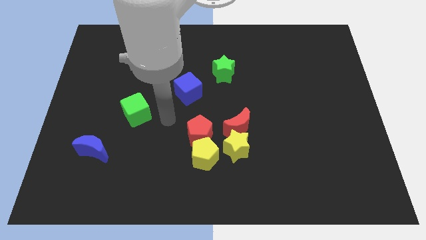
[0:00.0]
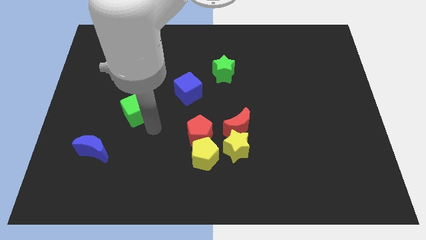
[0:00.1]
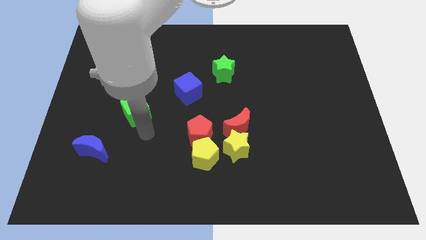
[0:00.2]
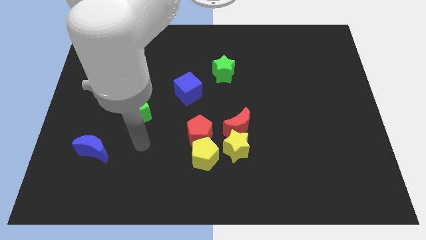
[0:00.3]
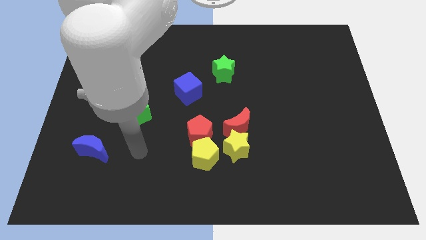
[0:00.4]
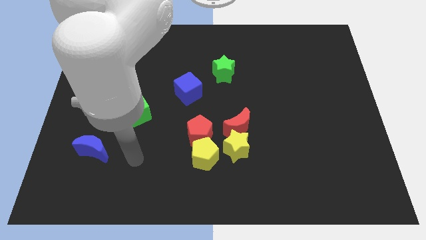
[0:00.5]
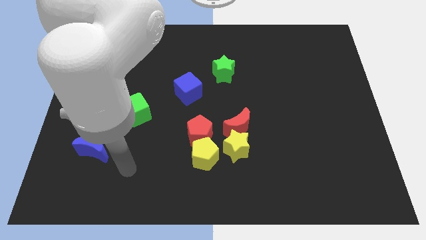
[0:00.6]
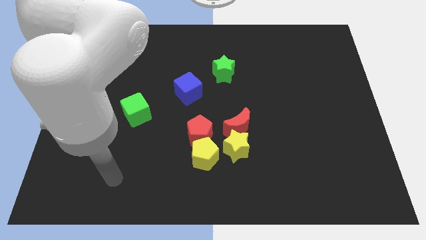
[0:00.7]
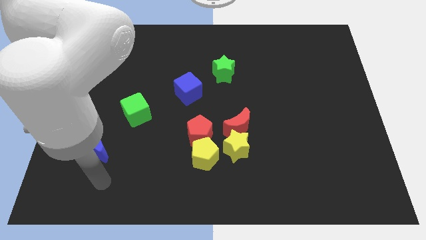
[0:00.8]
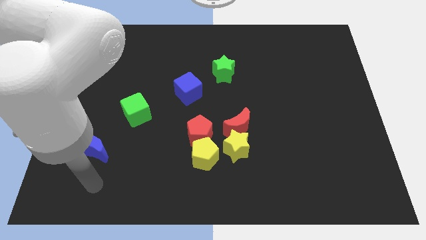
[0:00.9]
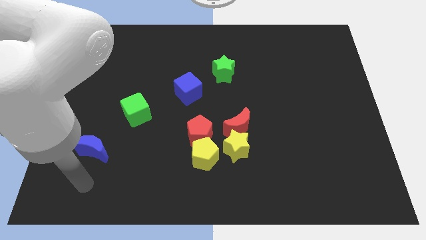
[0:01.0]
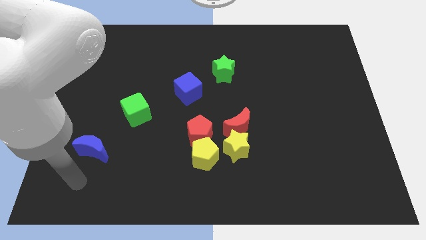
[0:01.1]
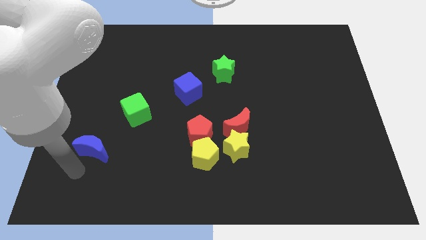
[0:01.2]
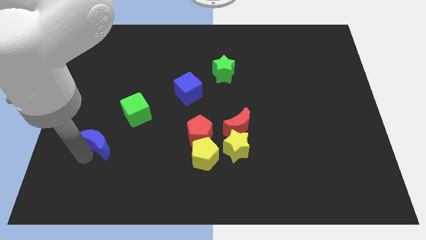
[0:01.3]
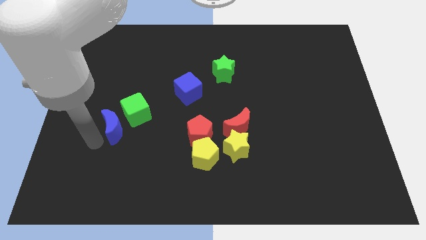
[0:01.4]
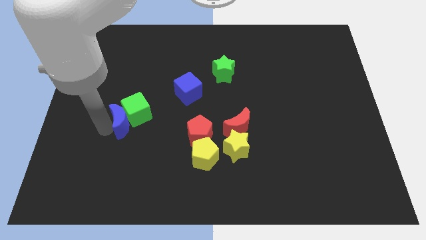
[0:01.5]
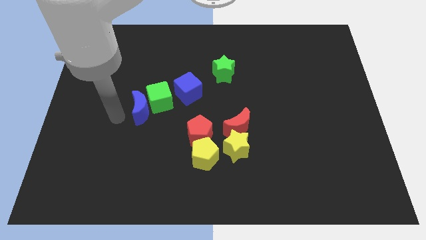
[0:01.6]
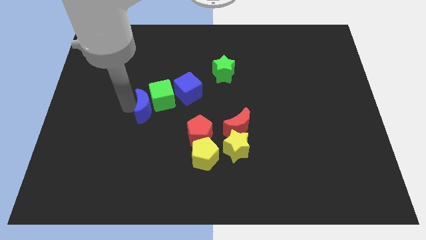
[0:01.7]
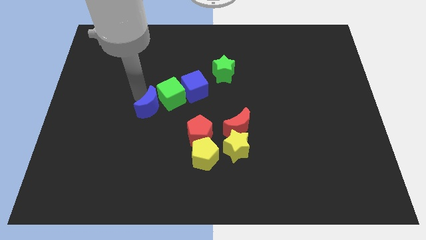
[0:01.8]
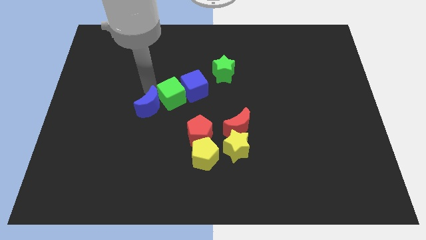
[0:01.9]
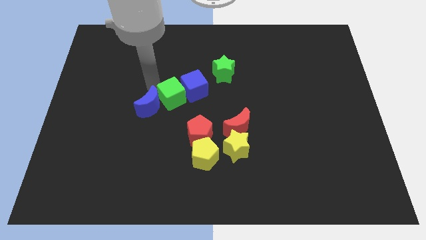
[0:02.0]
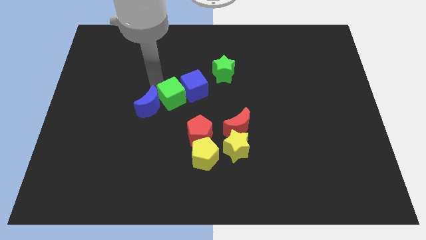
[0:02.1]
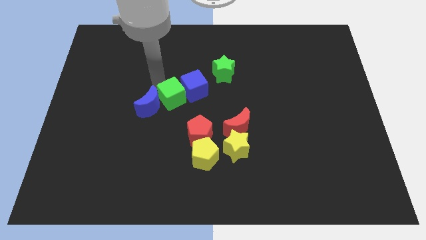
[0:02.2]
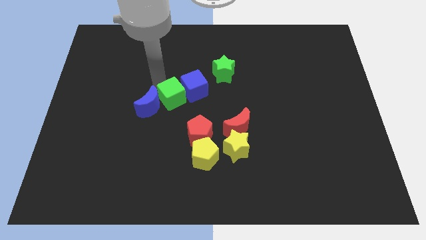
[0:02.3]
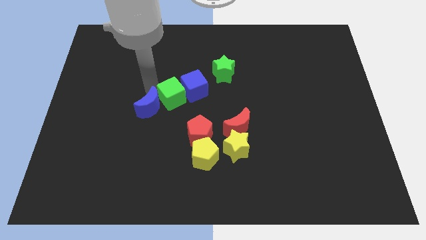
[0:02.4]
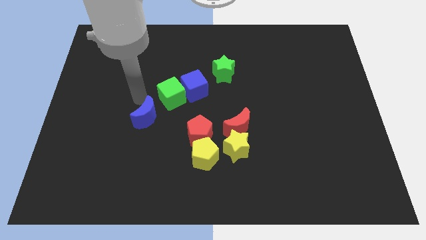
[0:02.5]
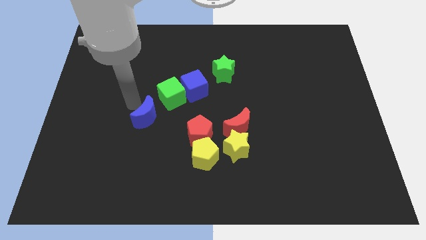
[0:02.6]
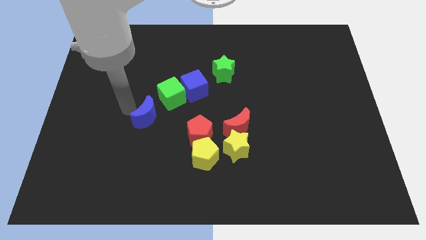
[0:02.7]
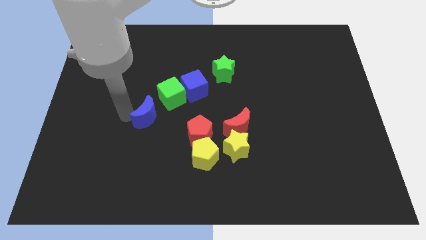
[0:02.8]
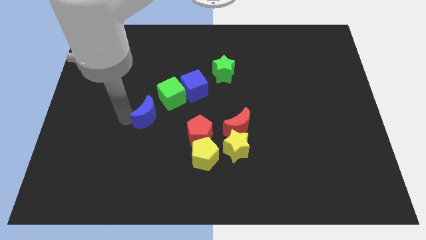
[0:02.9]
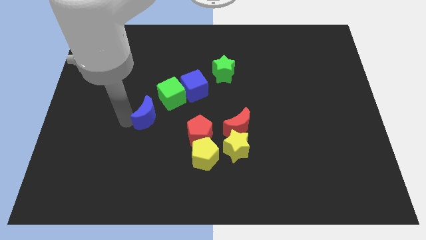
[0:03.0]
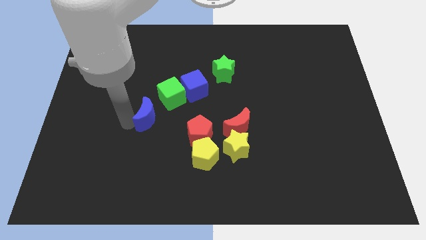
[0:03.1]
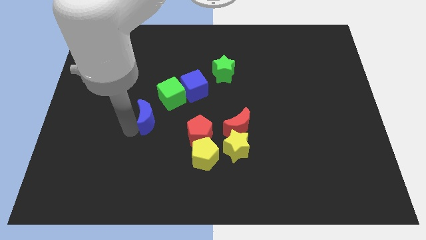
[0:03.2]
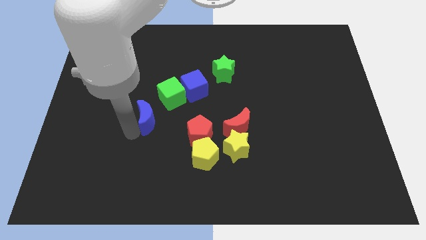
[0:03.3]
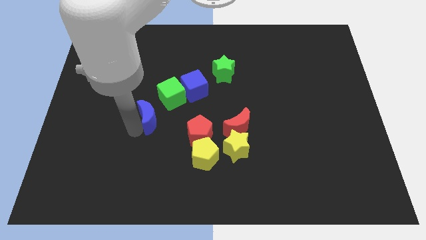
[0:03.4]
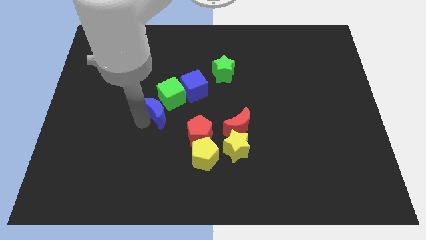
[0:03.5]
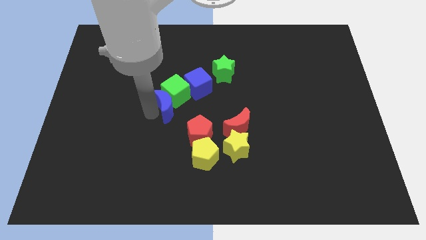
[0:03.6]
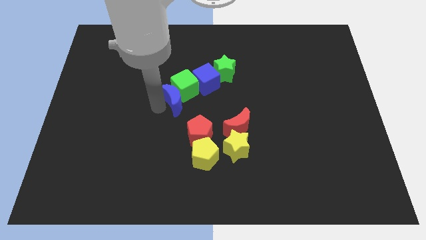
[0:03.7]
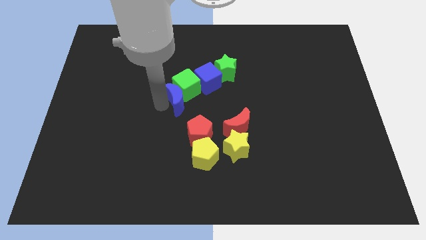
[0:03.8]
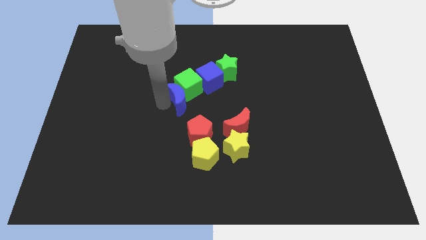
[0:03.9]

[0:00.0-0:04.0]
push all the green and blue blocks towards the top center of the board

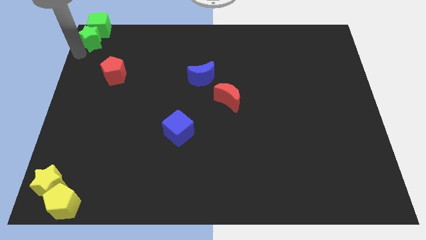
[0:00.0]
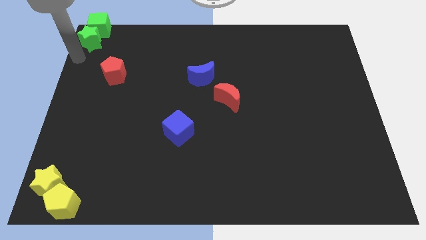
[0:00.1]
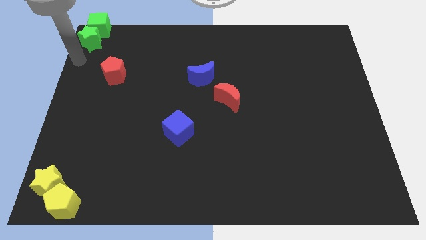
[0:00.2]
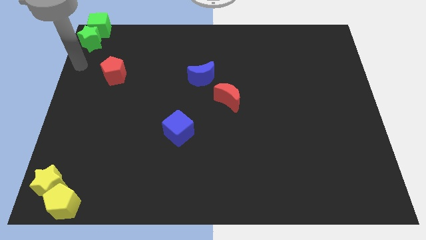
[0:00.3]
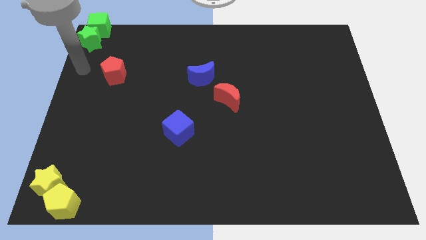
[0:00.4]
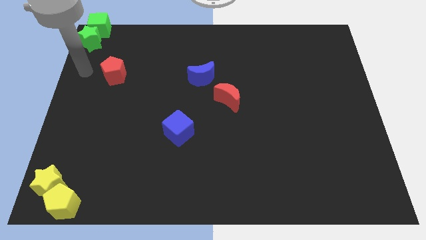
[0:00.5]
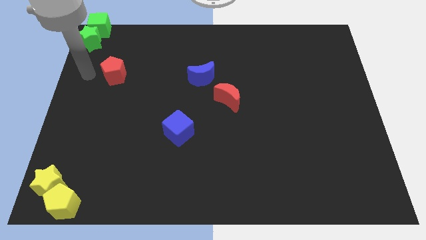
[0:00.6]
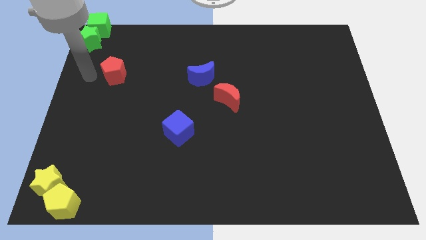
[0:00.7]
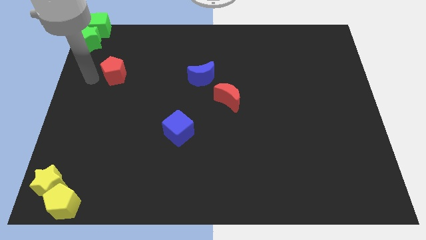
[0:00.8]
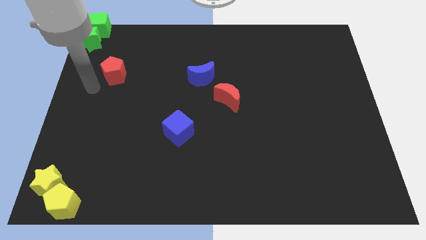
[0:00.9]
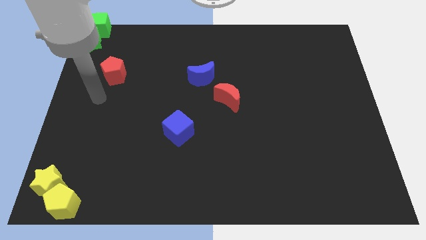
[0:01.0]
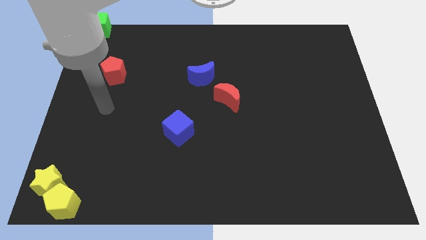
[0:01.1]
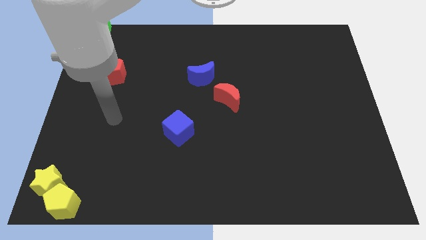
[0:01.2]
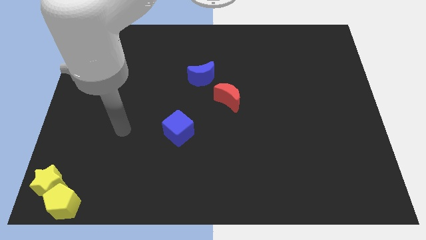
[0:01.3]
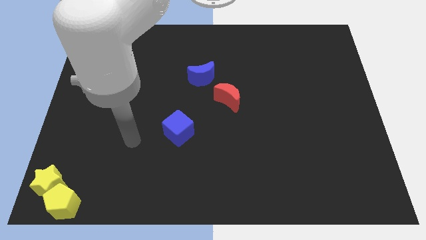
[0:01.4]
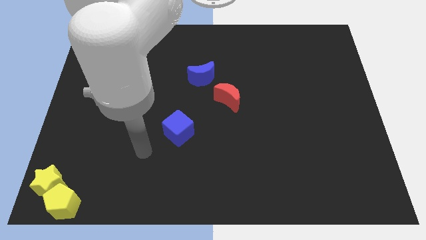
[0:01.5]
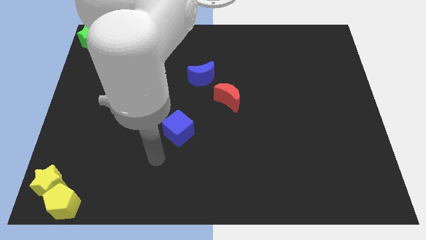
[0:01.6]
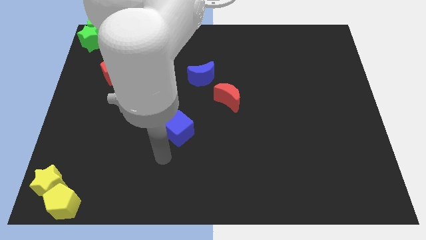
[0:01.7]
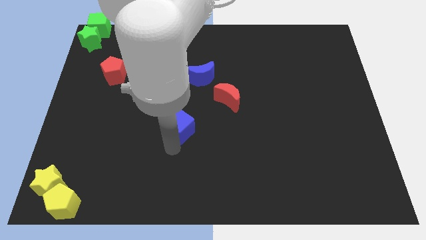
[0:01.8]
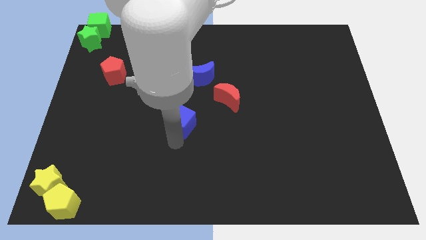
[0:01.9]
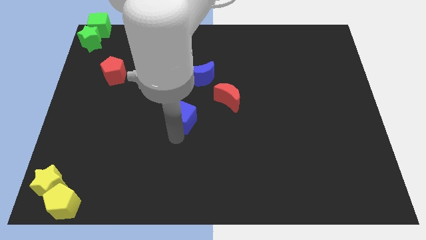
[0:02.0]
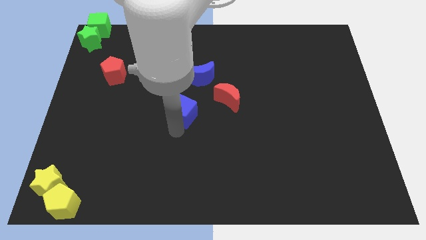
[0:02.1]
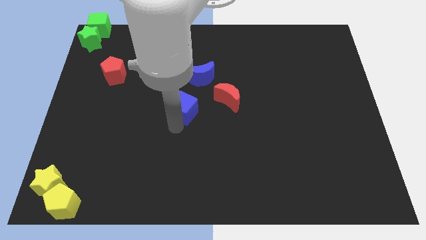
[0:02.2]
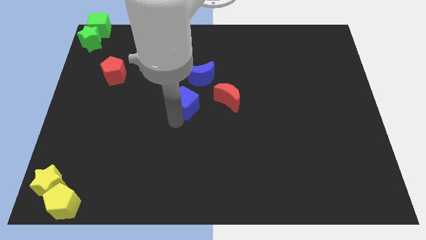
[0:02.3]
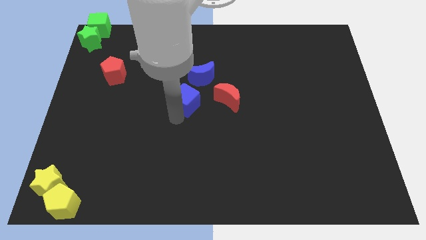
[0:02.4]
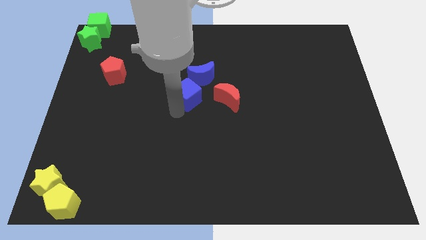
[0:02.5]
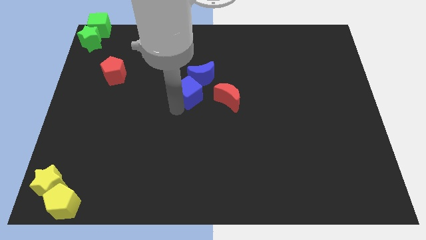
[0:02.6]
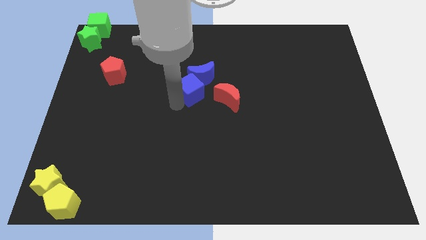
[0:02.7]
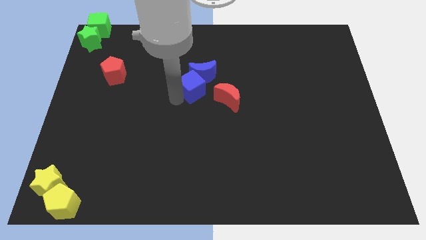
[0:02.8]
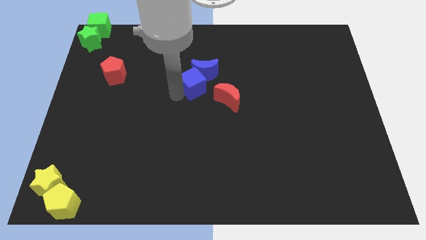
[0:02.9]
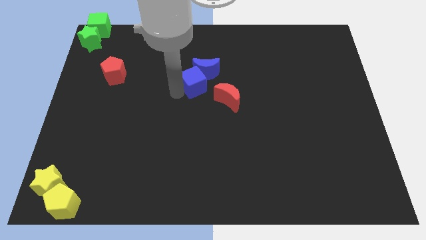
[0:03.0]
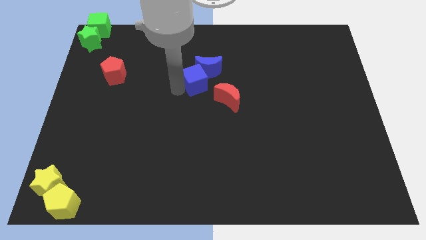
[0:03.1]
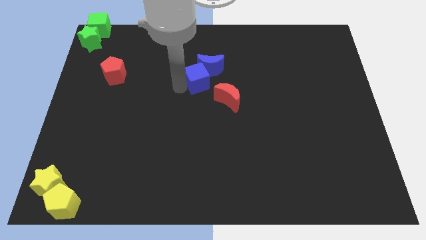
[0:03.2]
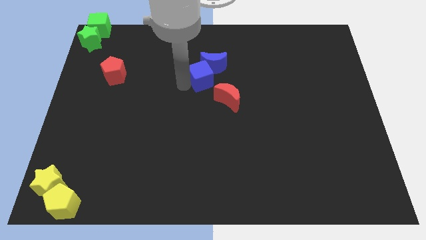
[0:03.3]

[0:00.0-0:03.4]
push the blue cube into the blue moon

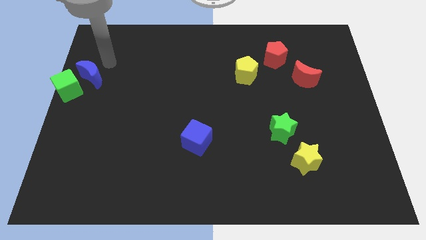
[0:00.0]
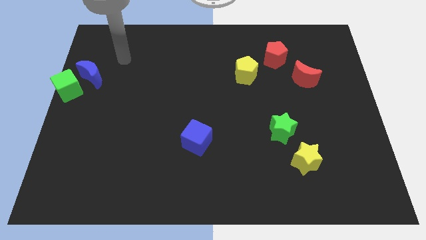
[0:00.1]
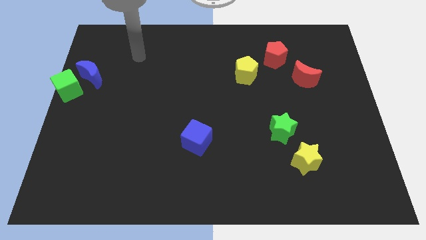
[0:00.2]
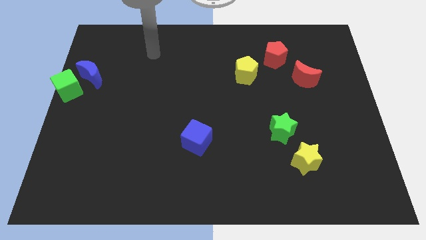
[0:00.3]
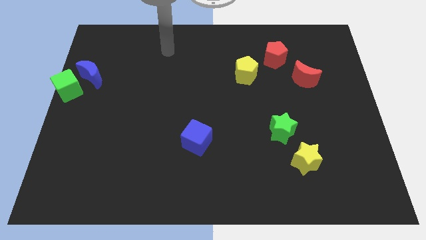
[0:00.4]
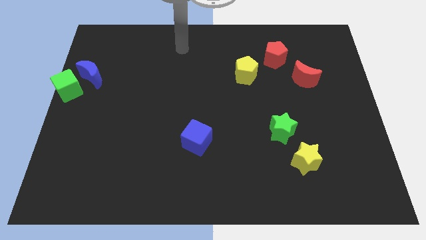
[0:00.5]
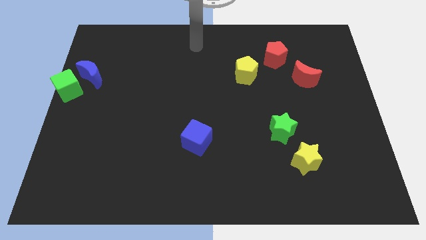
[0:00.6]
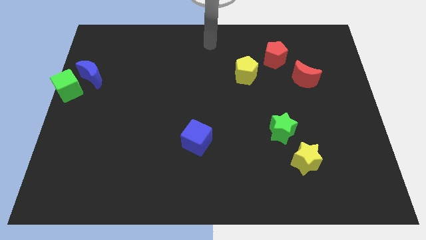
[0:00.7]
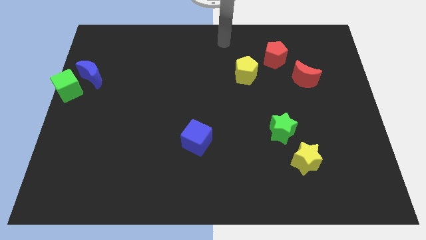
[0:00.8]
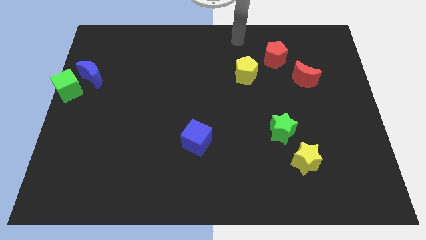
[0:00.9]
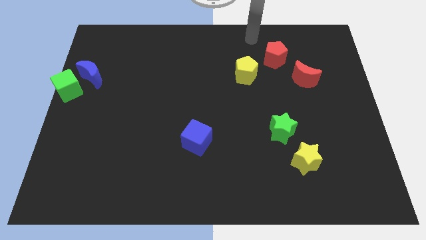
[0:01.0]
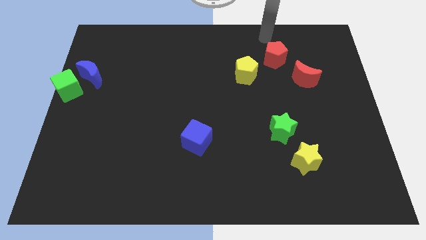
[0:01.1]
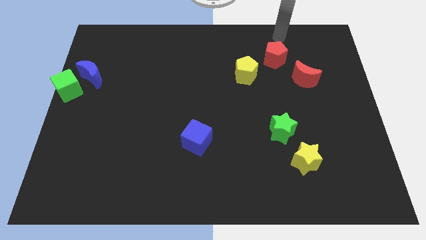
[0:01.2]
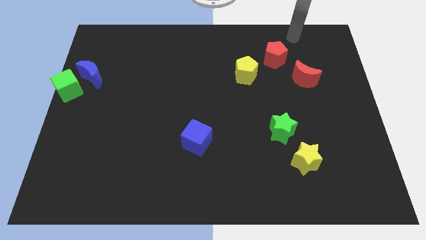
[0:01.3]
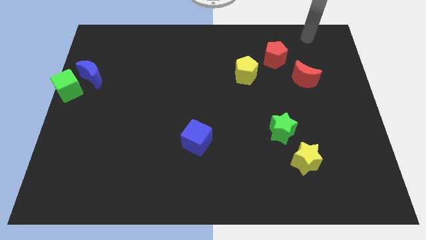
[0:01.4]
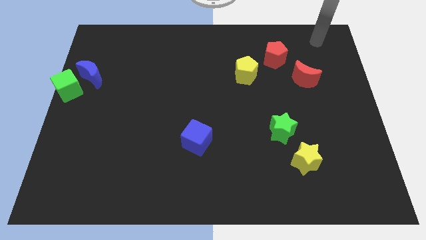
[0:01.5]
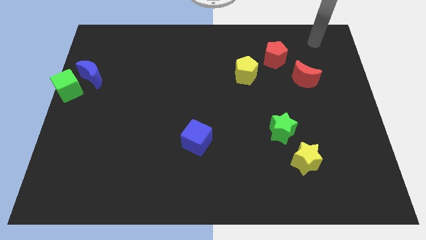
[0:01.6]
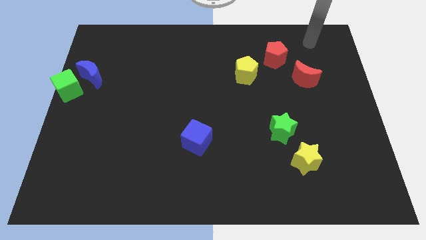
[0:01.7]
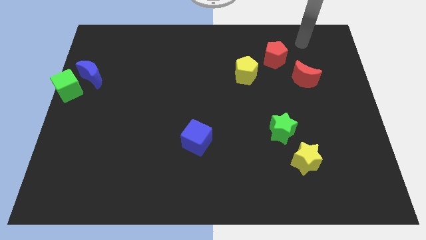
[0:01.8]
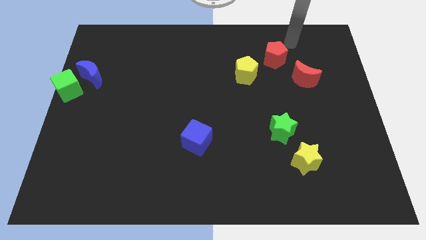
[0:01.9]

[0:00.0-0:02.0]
move your arm towards the top of the red pentagon
